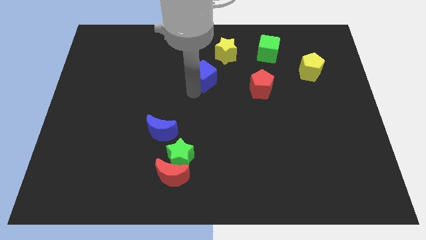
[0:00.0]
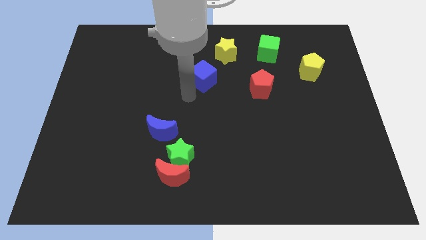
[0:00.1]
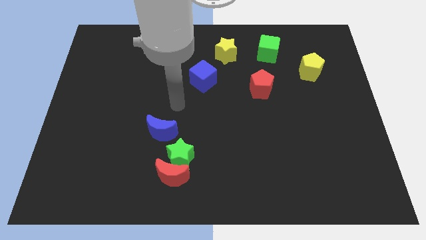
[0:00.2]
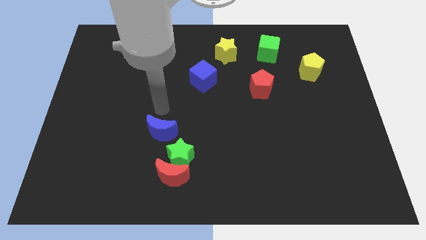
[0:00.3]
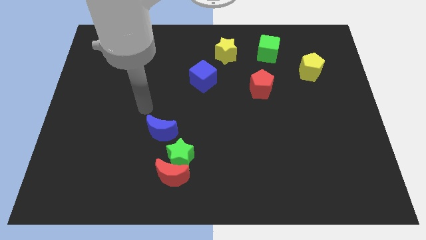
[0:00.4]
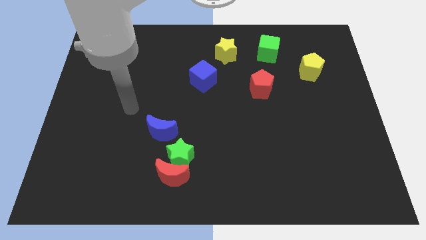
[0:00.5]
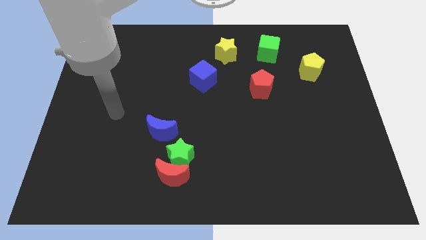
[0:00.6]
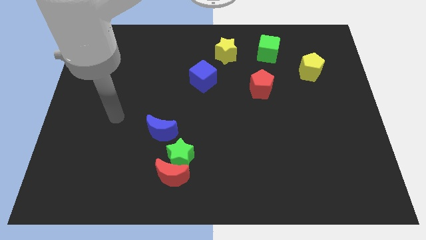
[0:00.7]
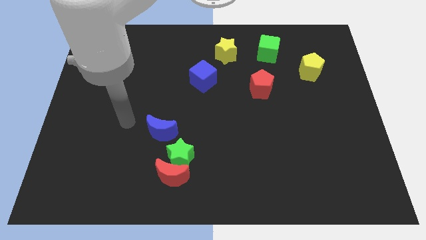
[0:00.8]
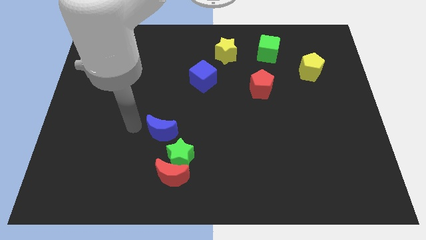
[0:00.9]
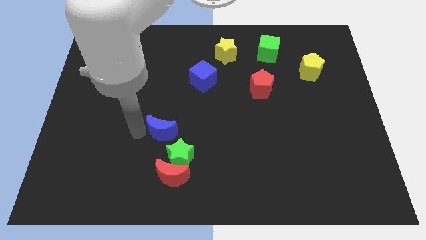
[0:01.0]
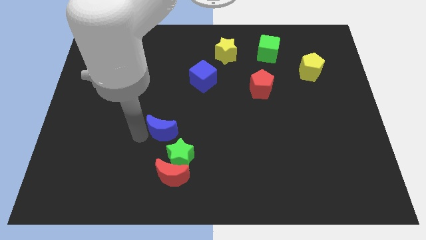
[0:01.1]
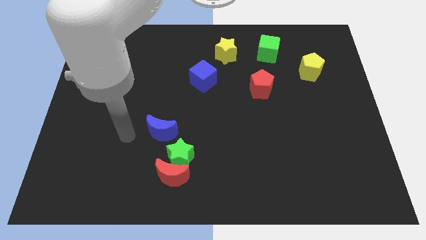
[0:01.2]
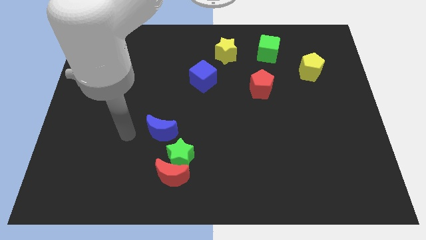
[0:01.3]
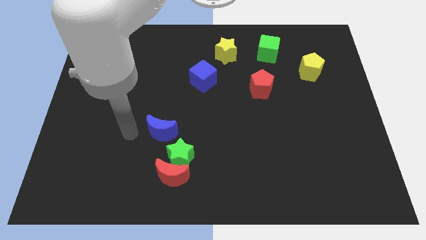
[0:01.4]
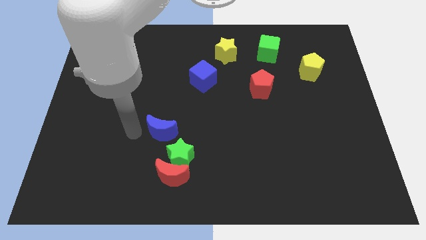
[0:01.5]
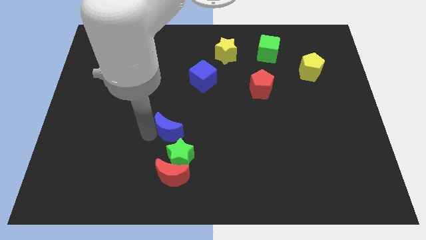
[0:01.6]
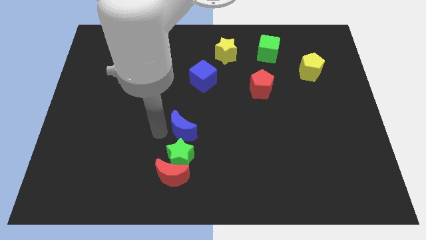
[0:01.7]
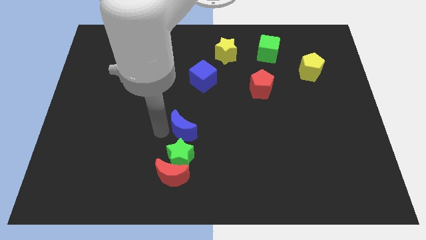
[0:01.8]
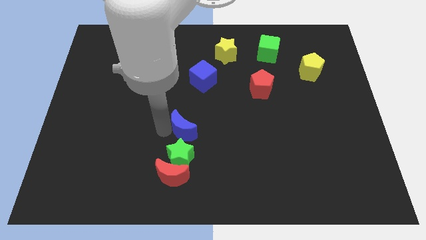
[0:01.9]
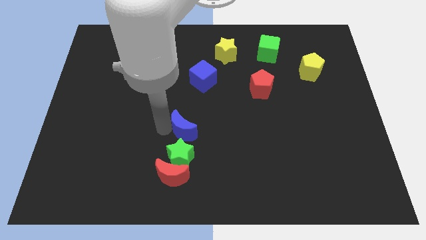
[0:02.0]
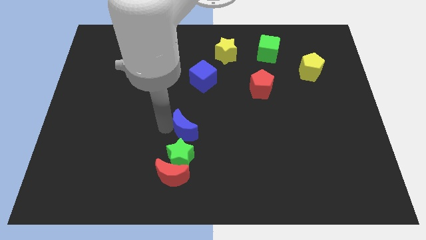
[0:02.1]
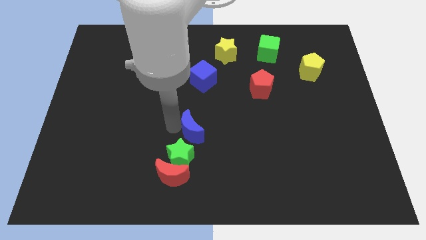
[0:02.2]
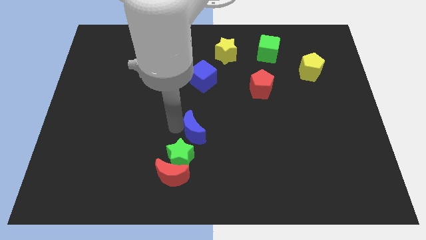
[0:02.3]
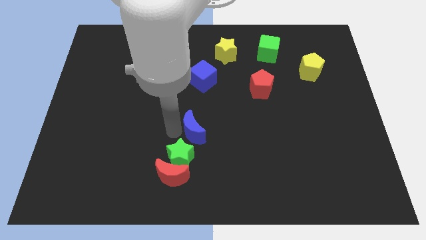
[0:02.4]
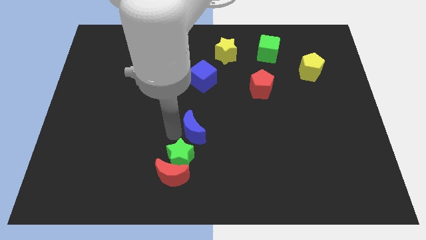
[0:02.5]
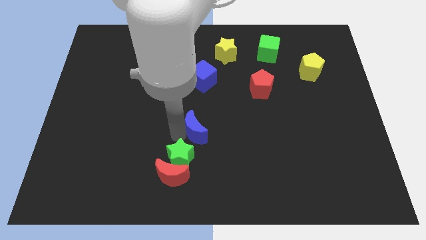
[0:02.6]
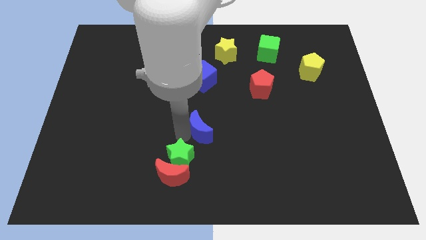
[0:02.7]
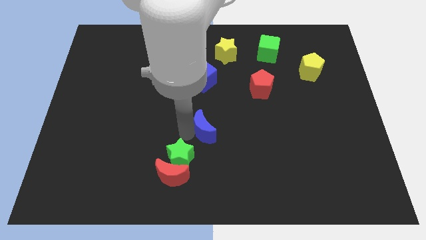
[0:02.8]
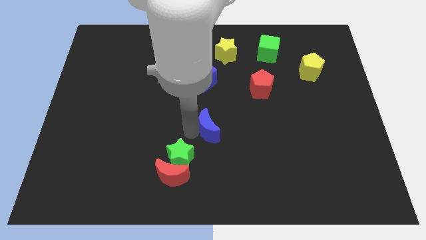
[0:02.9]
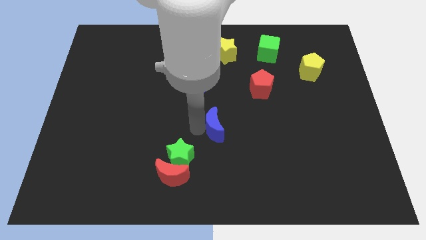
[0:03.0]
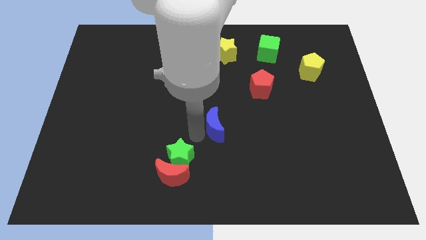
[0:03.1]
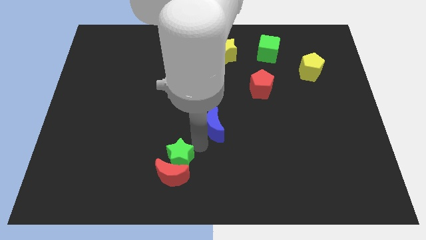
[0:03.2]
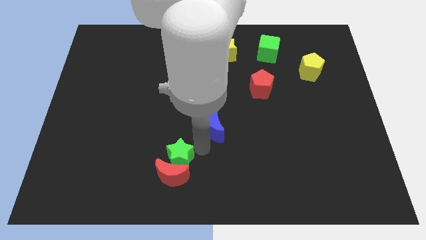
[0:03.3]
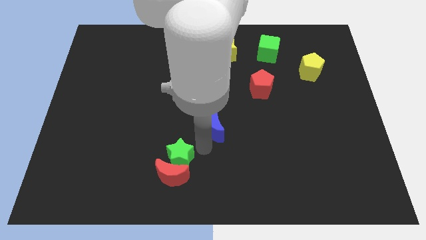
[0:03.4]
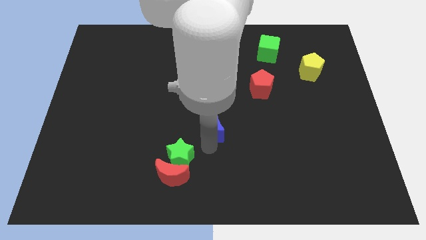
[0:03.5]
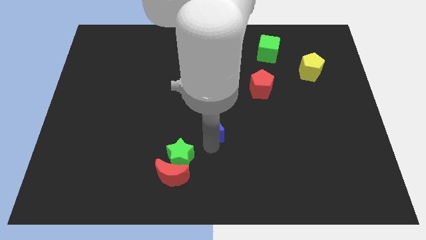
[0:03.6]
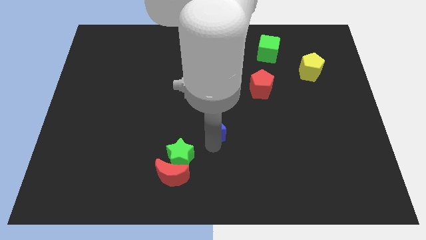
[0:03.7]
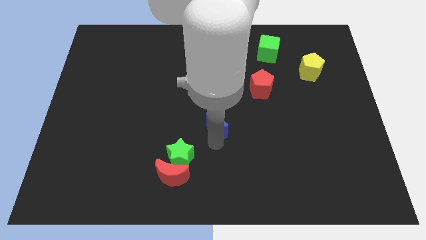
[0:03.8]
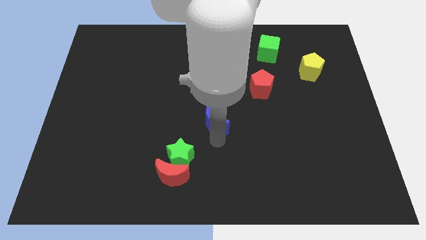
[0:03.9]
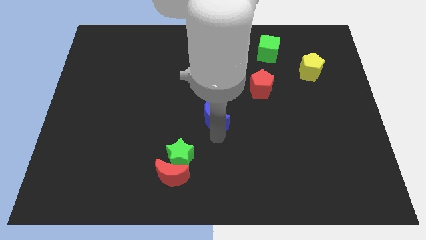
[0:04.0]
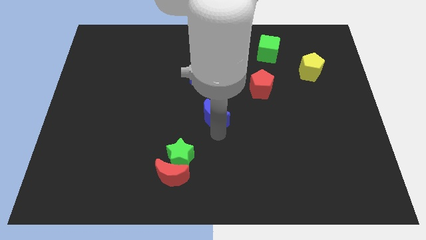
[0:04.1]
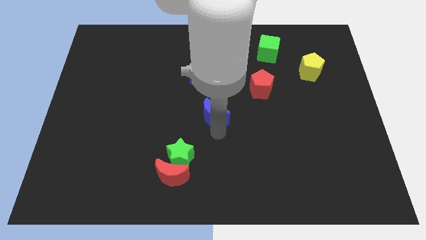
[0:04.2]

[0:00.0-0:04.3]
push the blue crescent to the bottom right of the blue cube

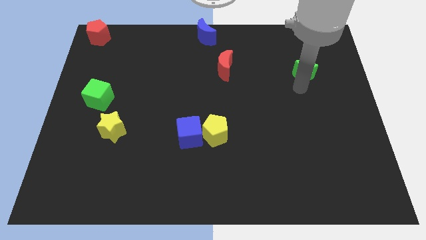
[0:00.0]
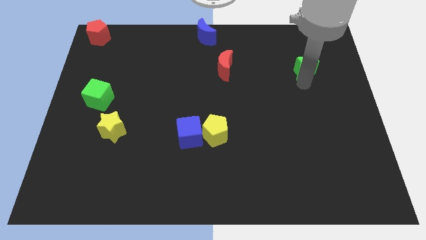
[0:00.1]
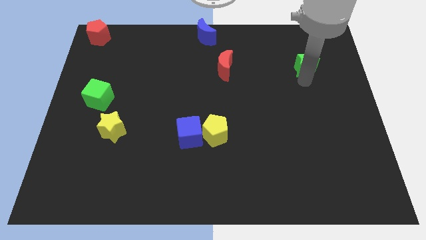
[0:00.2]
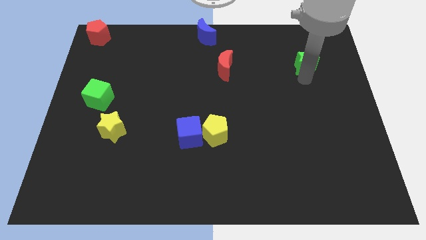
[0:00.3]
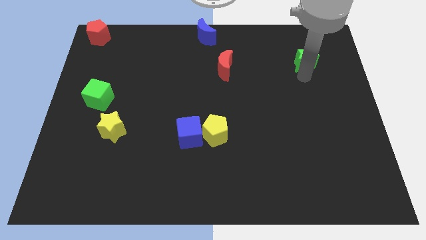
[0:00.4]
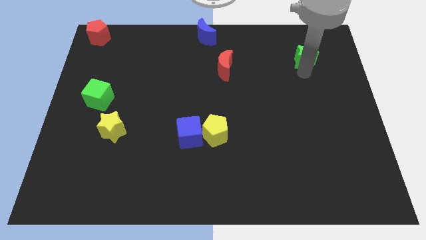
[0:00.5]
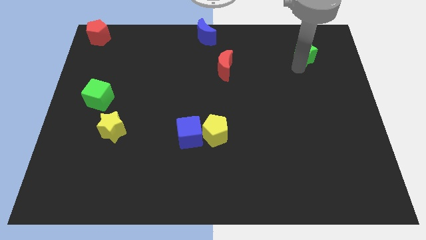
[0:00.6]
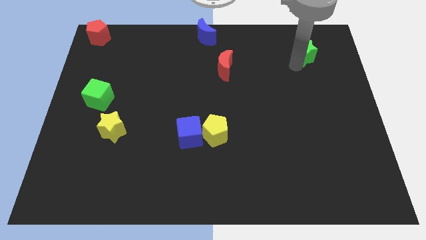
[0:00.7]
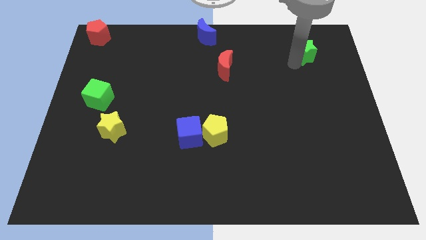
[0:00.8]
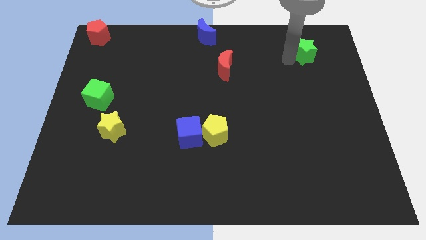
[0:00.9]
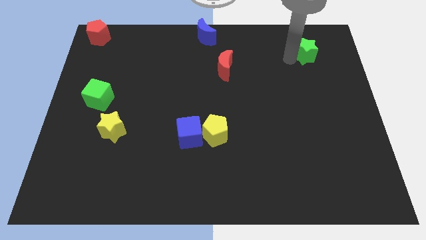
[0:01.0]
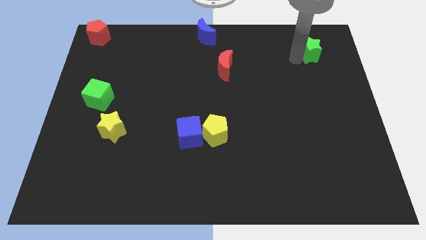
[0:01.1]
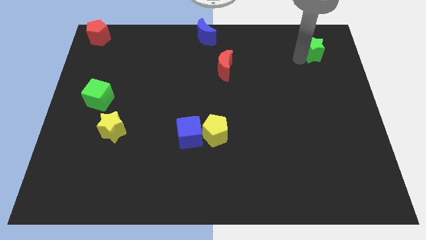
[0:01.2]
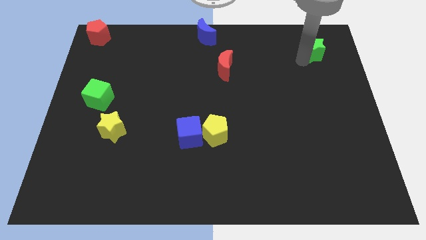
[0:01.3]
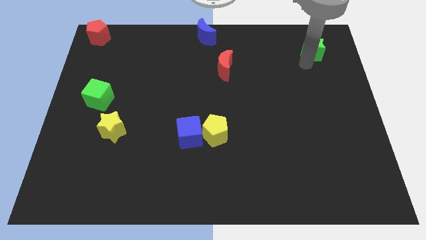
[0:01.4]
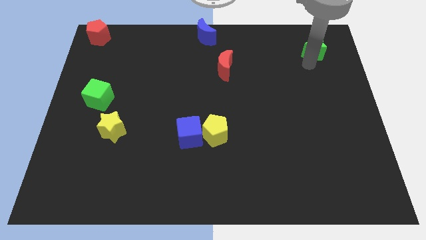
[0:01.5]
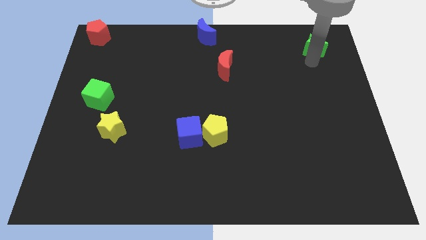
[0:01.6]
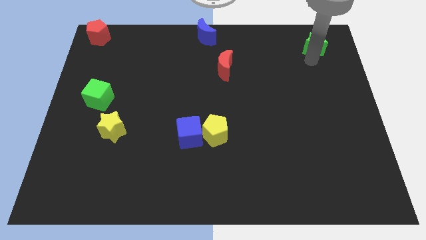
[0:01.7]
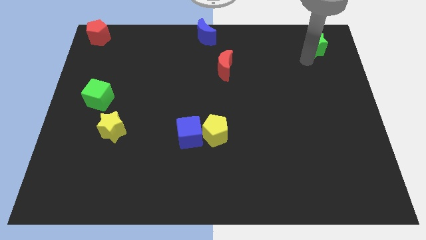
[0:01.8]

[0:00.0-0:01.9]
move green star to the top right corner

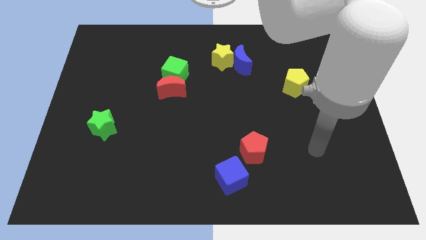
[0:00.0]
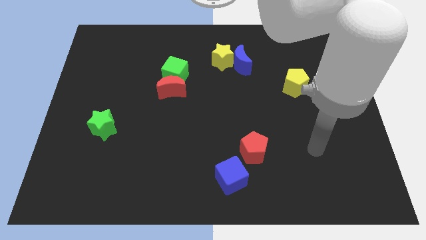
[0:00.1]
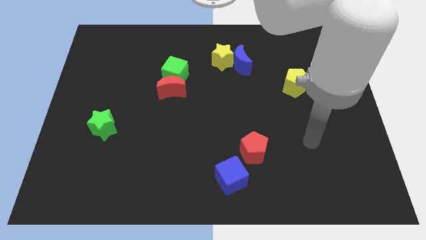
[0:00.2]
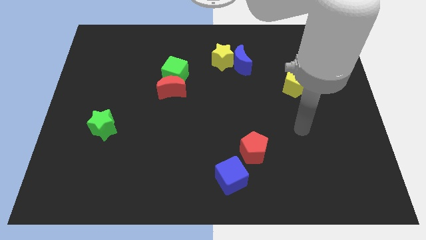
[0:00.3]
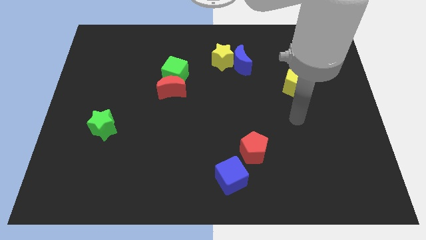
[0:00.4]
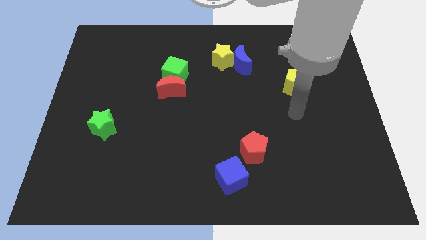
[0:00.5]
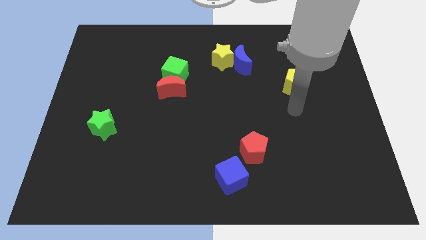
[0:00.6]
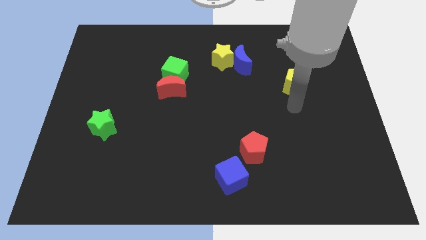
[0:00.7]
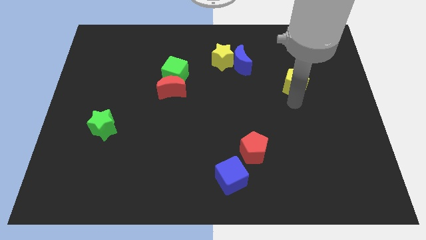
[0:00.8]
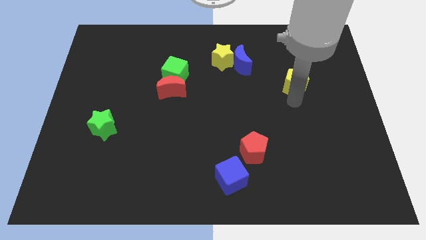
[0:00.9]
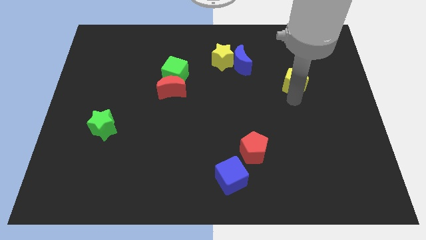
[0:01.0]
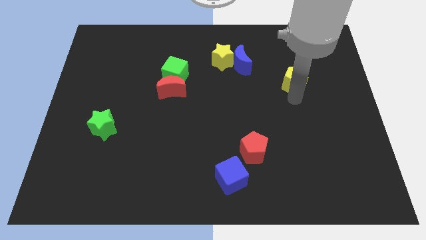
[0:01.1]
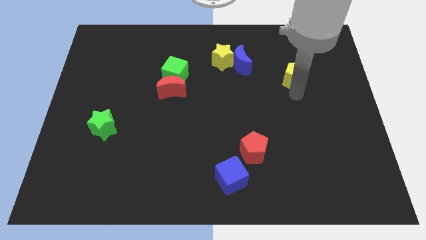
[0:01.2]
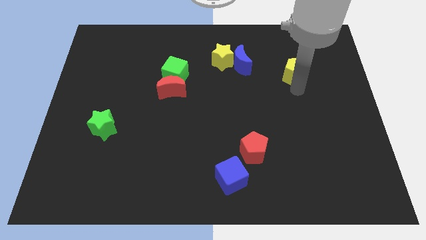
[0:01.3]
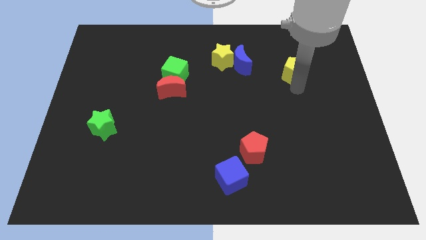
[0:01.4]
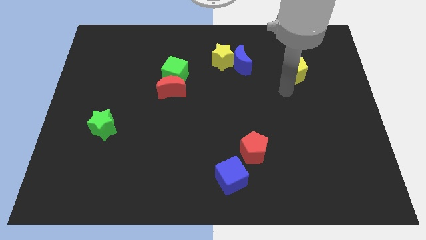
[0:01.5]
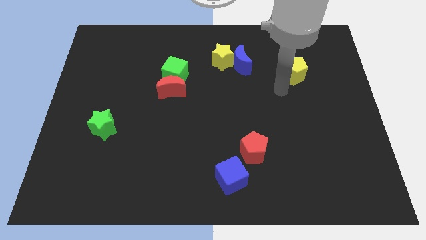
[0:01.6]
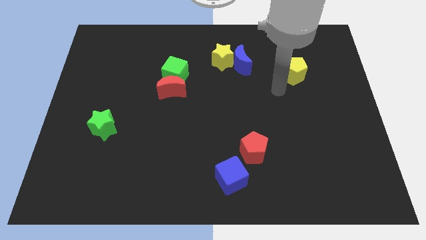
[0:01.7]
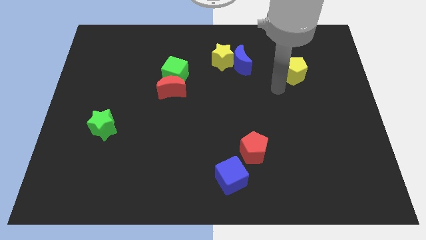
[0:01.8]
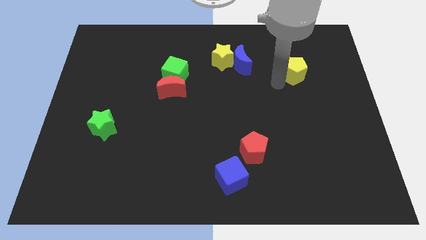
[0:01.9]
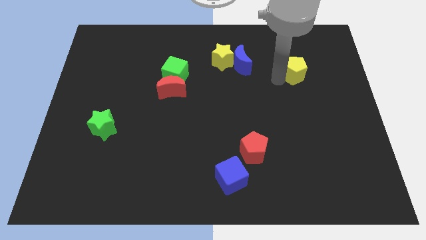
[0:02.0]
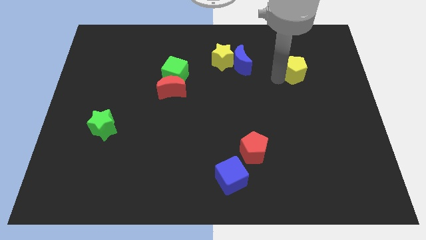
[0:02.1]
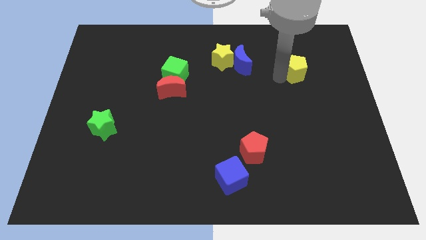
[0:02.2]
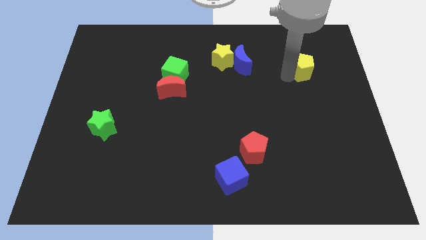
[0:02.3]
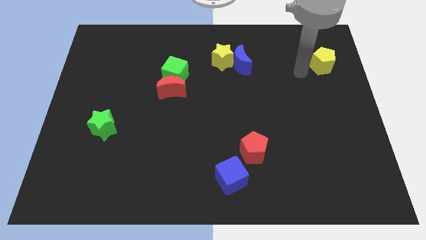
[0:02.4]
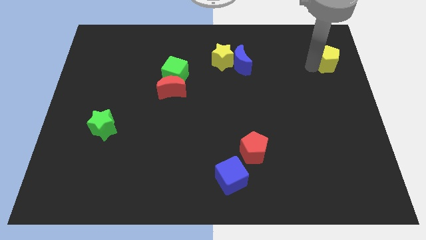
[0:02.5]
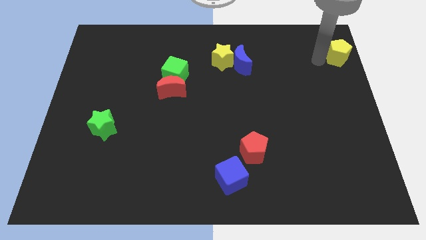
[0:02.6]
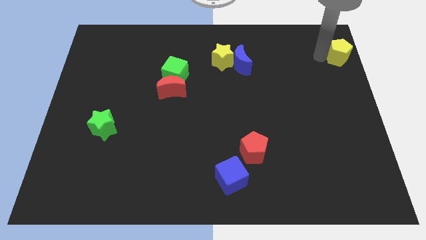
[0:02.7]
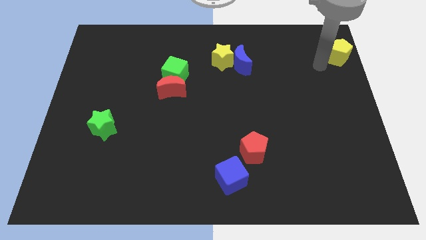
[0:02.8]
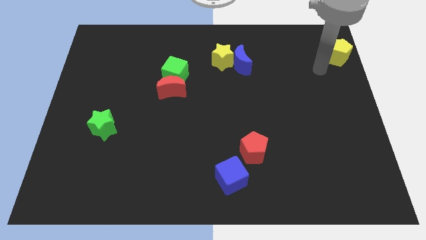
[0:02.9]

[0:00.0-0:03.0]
move yellow pentagon to the right top side
